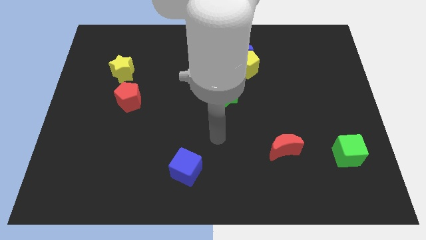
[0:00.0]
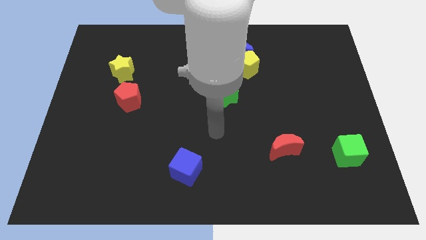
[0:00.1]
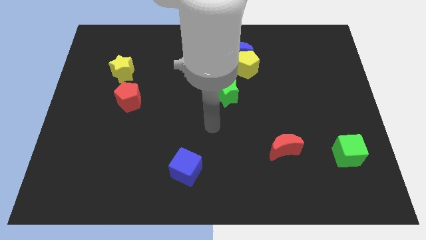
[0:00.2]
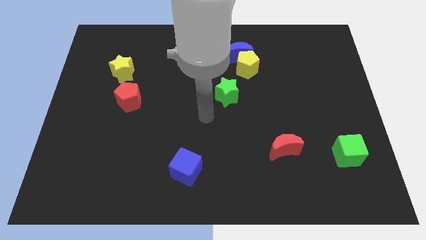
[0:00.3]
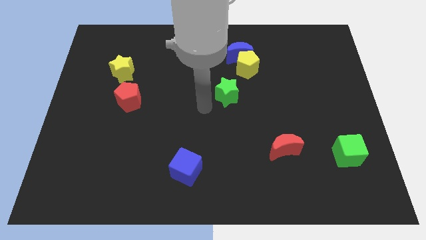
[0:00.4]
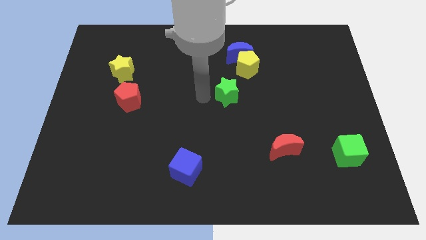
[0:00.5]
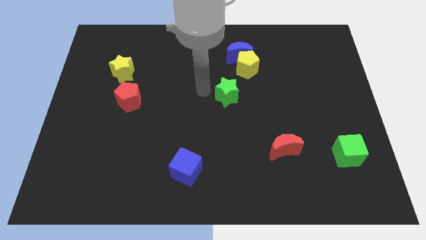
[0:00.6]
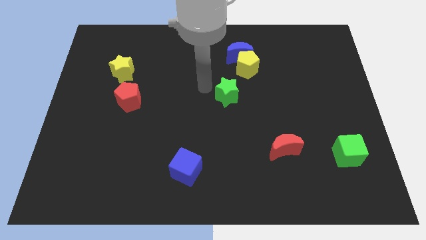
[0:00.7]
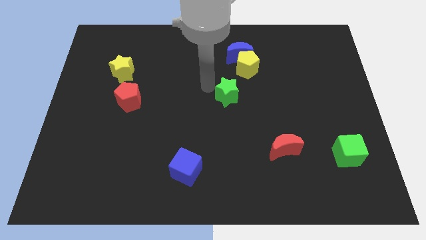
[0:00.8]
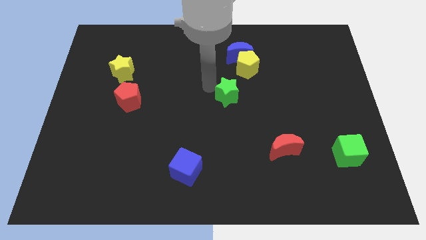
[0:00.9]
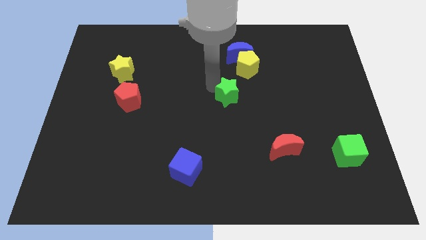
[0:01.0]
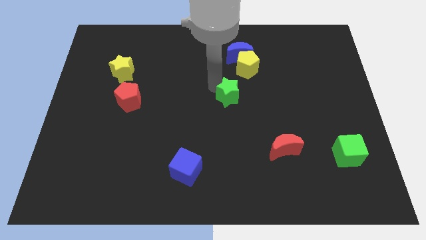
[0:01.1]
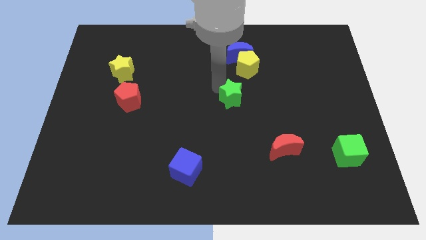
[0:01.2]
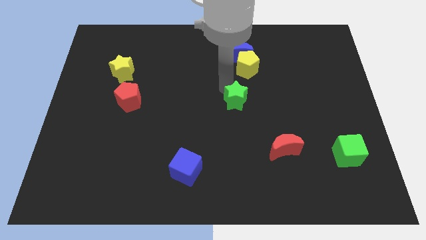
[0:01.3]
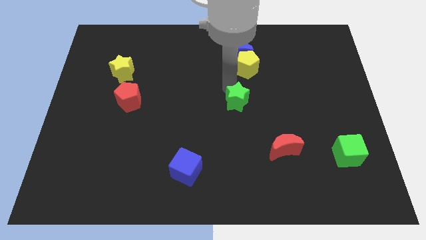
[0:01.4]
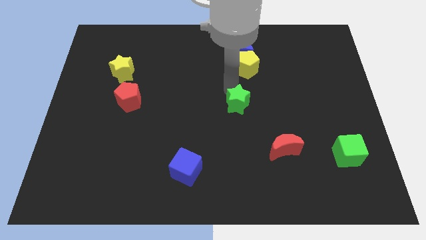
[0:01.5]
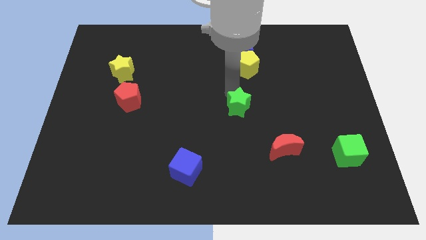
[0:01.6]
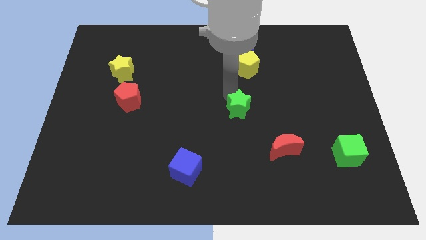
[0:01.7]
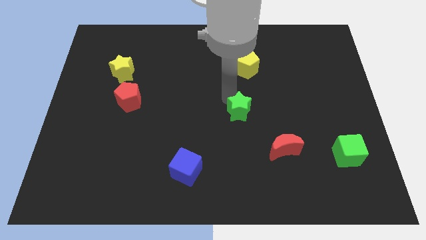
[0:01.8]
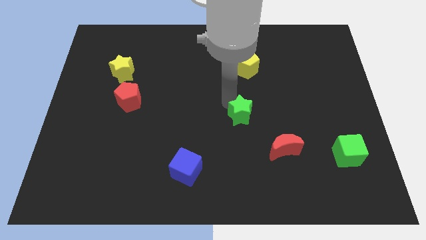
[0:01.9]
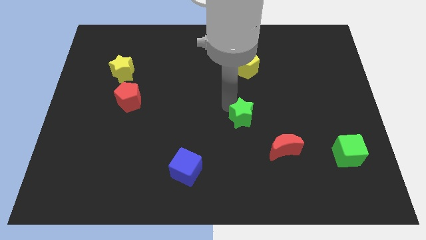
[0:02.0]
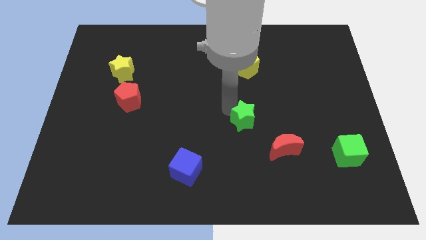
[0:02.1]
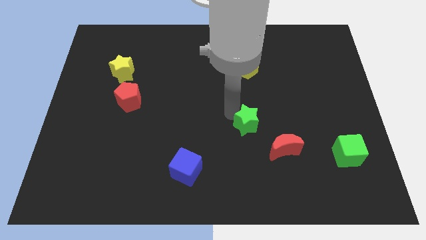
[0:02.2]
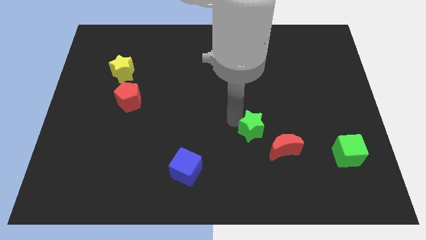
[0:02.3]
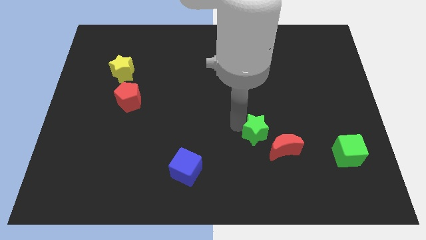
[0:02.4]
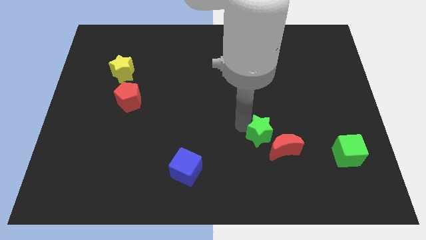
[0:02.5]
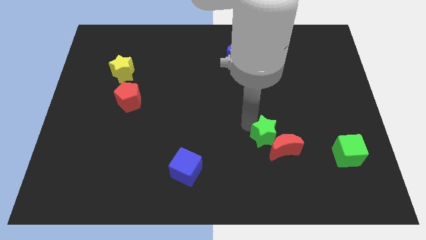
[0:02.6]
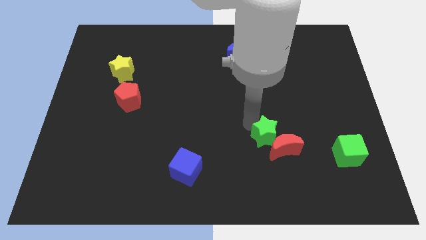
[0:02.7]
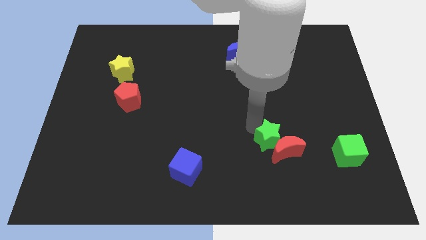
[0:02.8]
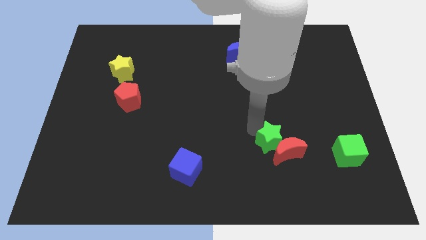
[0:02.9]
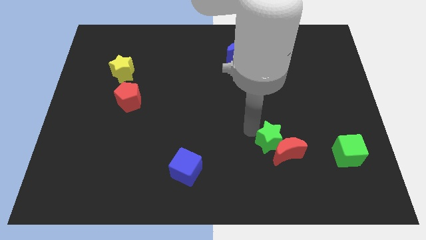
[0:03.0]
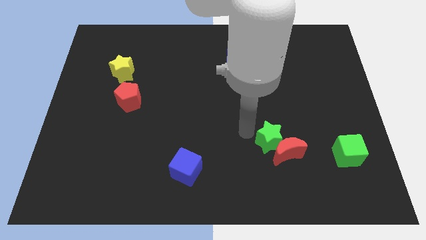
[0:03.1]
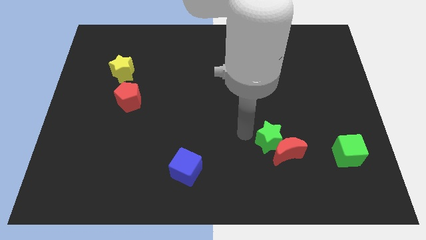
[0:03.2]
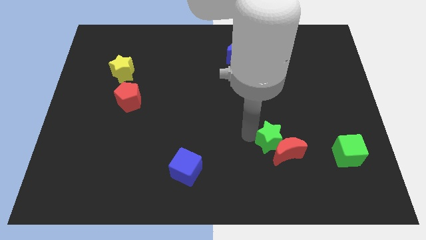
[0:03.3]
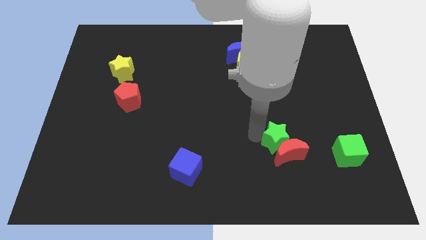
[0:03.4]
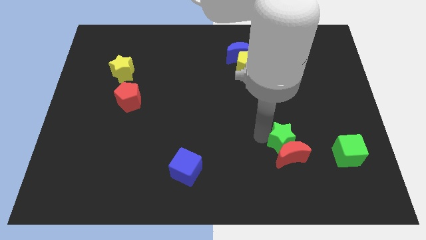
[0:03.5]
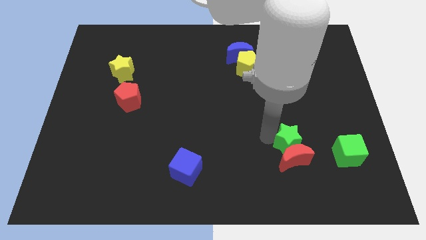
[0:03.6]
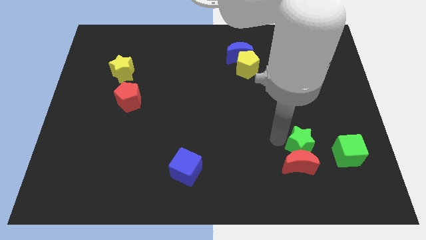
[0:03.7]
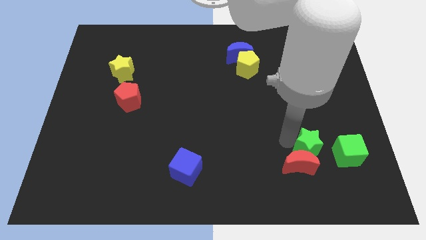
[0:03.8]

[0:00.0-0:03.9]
push the green star into the red crescent

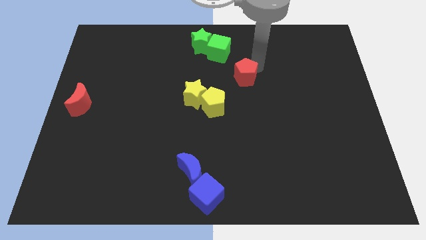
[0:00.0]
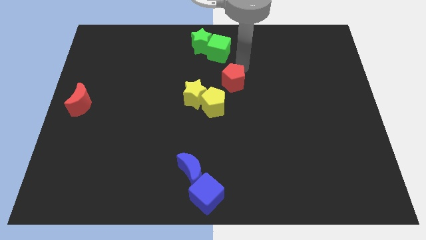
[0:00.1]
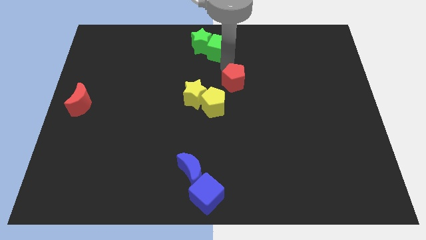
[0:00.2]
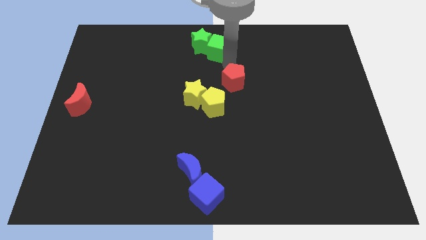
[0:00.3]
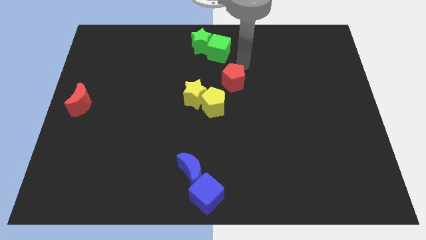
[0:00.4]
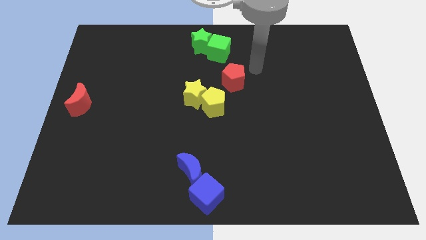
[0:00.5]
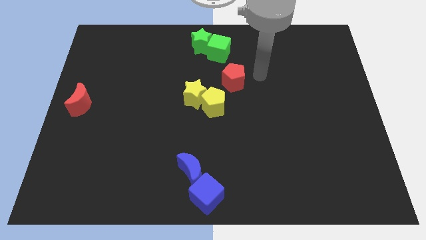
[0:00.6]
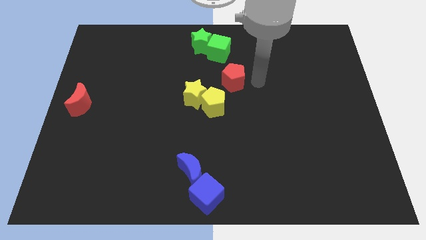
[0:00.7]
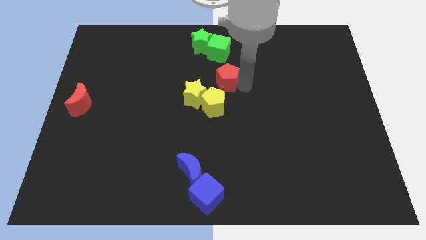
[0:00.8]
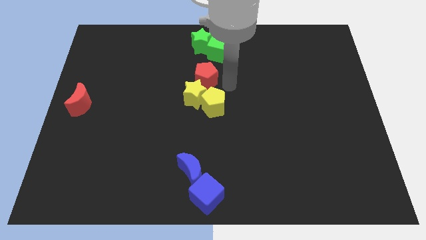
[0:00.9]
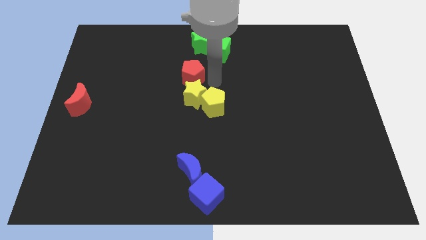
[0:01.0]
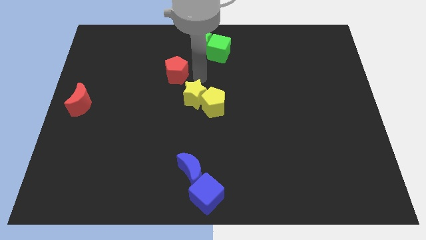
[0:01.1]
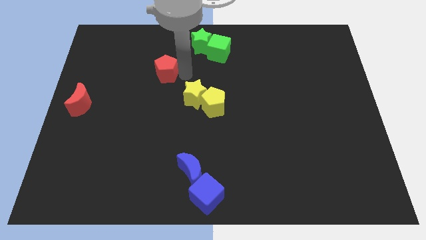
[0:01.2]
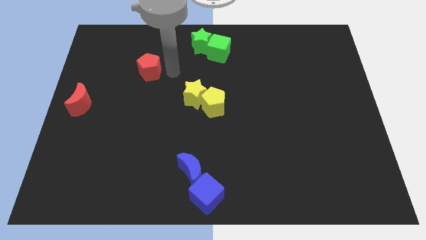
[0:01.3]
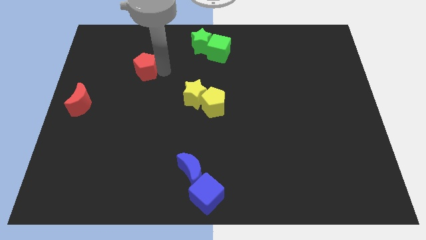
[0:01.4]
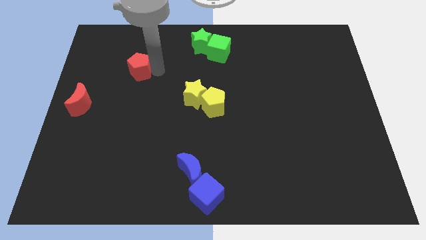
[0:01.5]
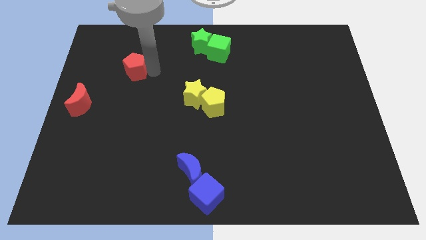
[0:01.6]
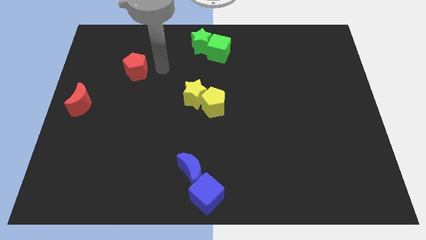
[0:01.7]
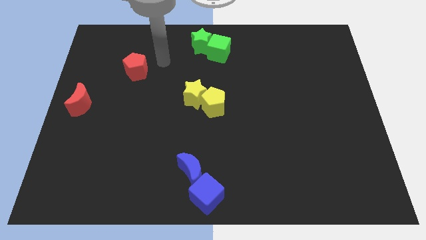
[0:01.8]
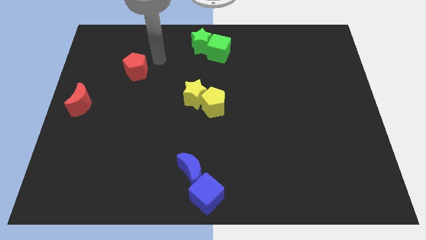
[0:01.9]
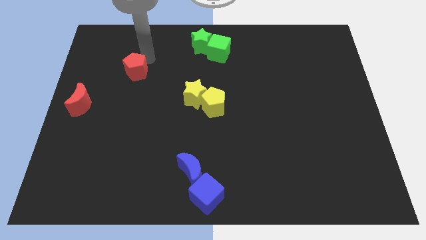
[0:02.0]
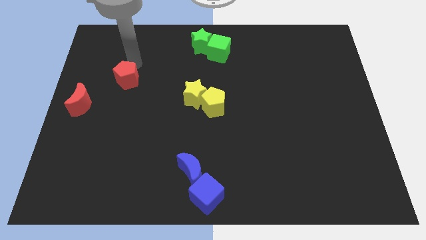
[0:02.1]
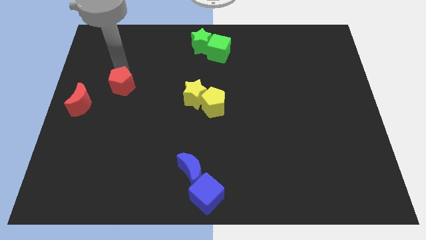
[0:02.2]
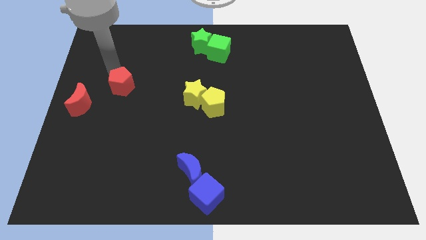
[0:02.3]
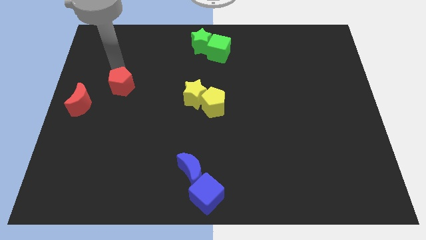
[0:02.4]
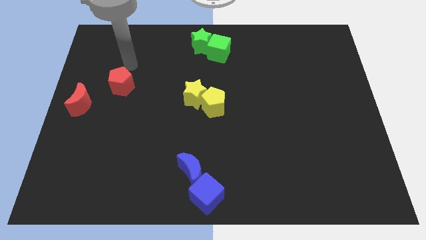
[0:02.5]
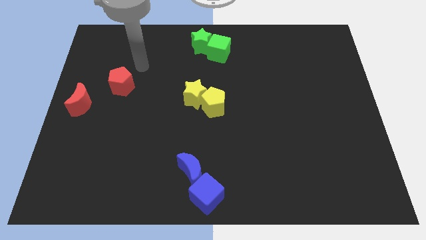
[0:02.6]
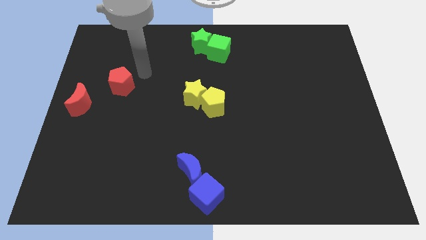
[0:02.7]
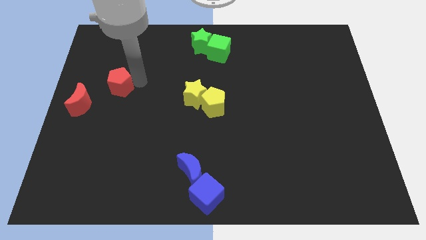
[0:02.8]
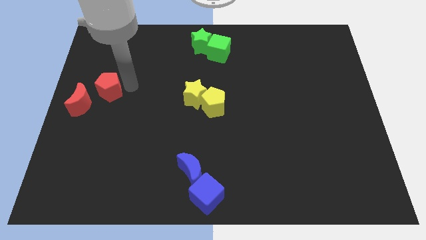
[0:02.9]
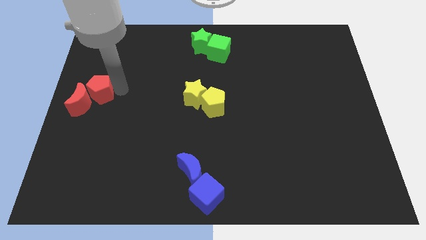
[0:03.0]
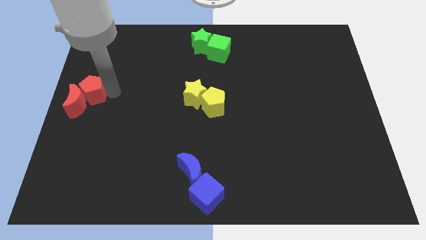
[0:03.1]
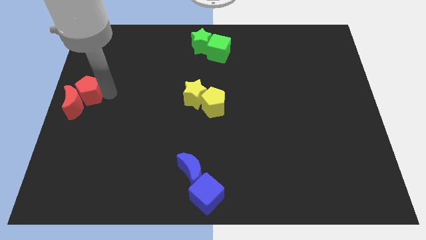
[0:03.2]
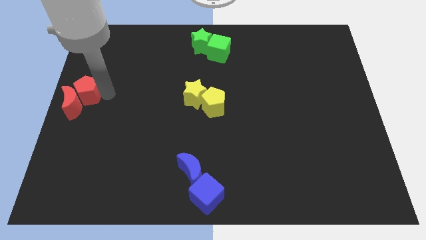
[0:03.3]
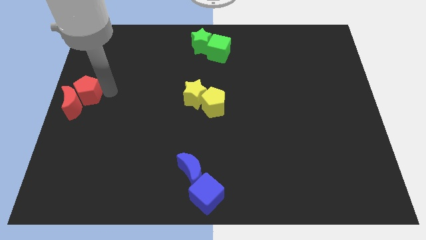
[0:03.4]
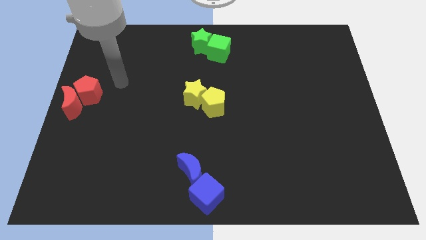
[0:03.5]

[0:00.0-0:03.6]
push the red pentagon into the red crescent

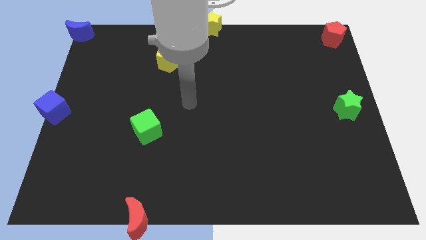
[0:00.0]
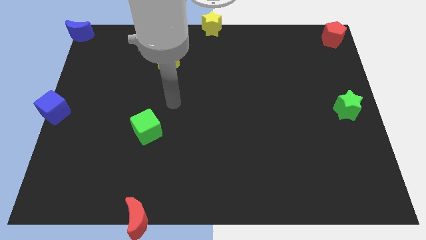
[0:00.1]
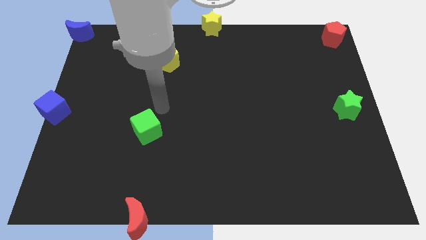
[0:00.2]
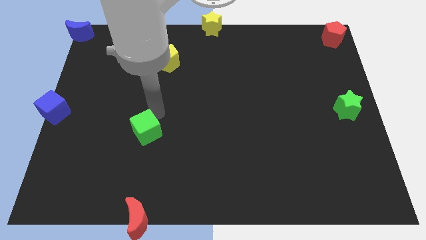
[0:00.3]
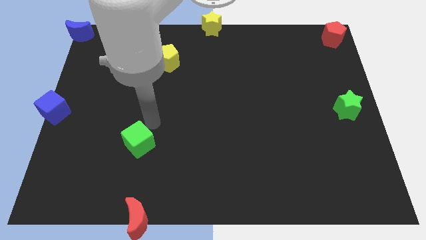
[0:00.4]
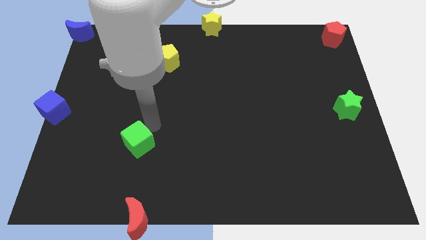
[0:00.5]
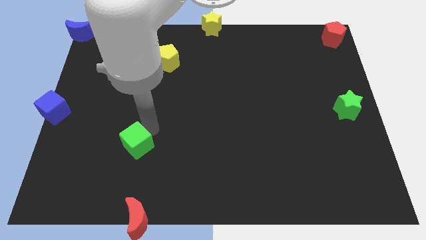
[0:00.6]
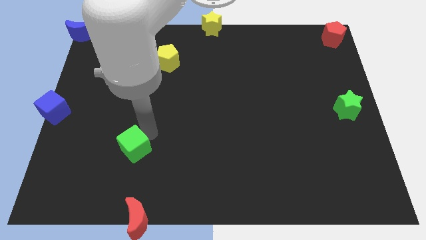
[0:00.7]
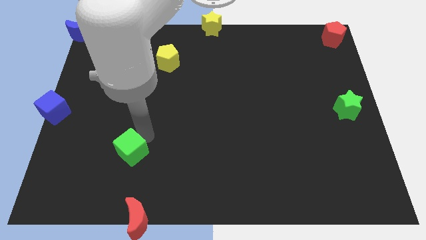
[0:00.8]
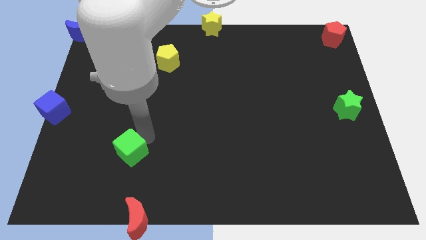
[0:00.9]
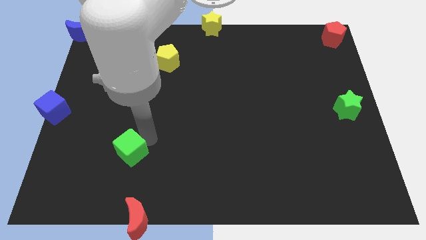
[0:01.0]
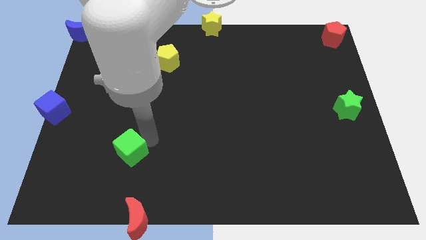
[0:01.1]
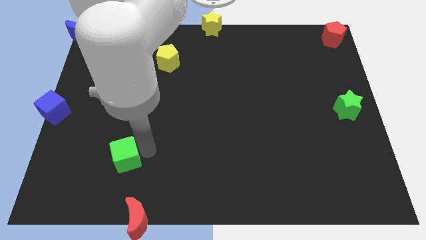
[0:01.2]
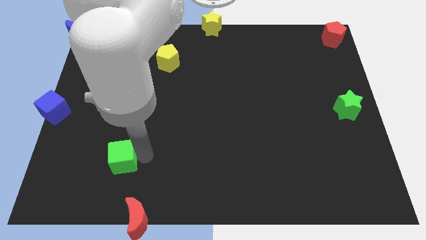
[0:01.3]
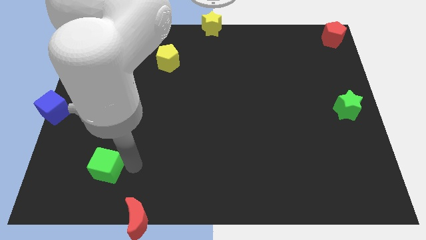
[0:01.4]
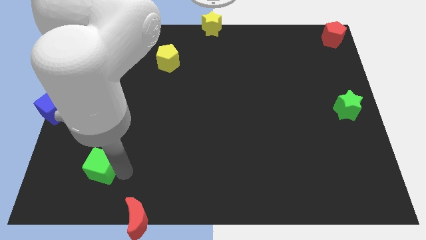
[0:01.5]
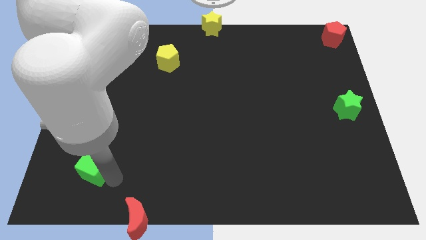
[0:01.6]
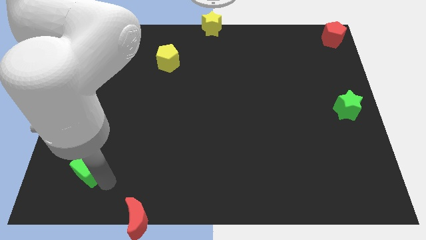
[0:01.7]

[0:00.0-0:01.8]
place the green cube in between the red moon and blue cube
